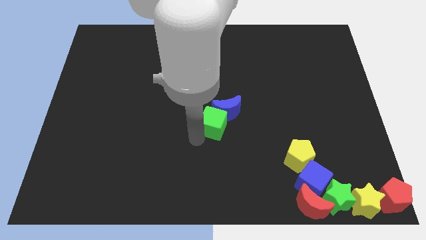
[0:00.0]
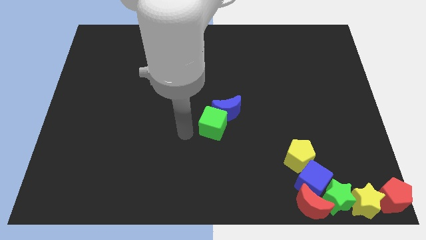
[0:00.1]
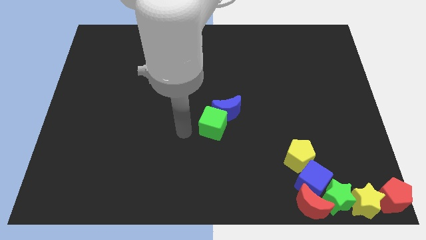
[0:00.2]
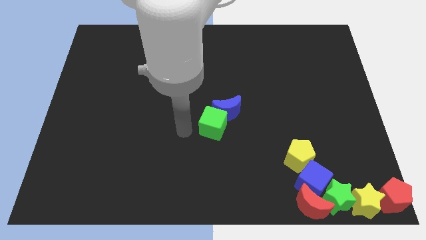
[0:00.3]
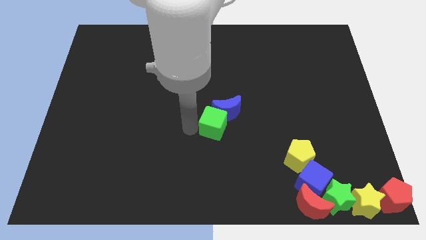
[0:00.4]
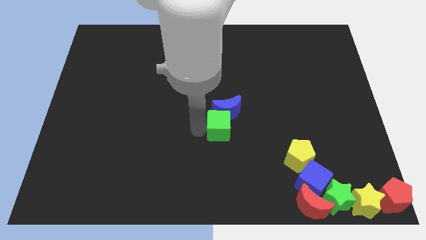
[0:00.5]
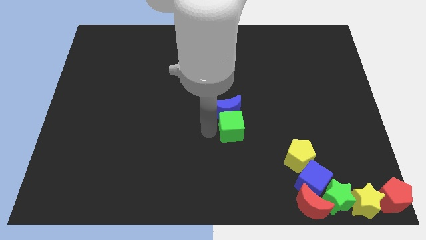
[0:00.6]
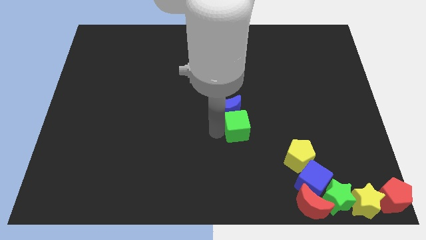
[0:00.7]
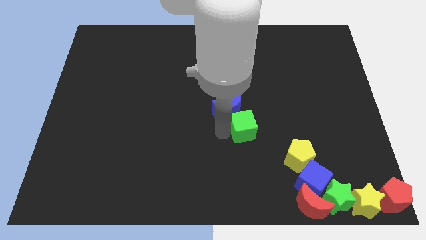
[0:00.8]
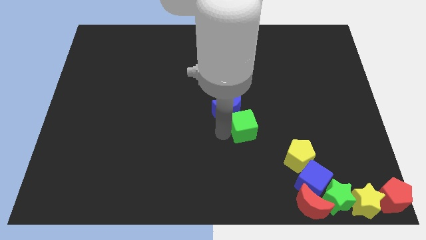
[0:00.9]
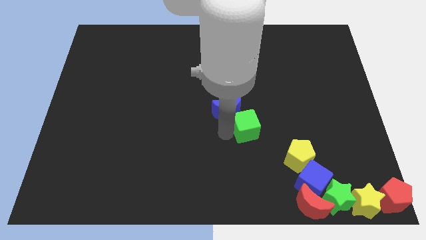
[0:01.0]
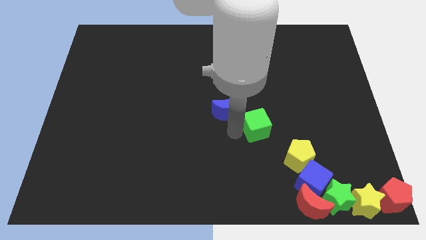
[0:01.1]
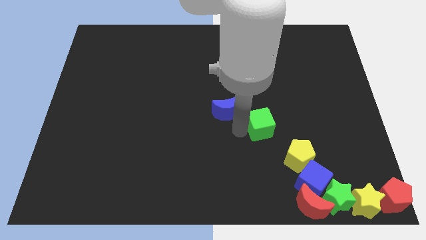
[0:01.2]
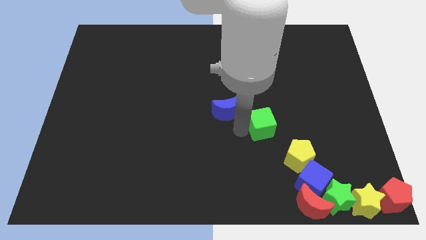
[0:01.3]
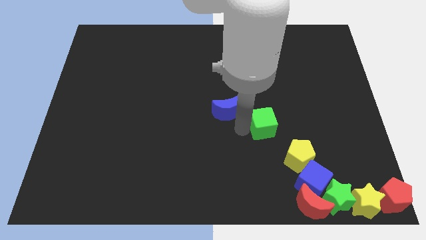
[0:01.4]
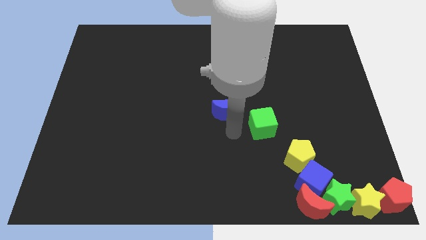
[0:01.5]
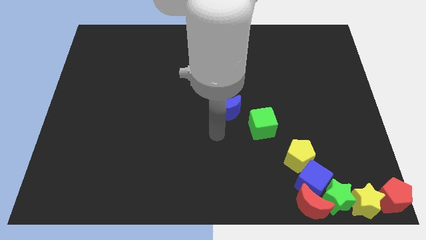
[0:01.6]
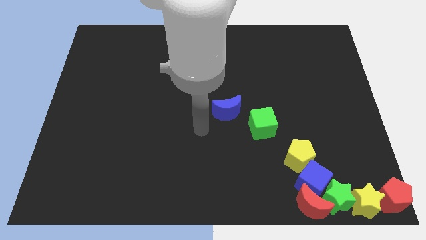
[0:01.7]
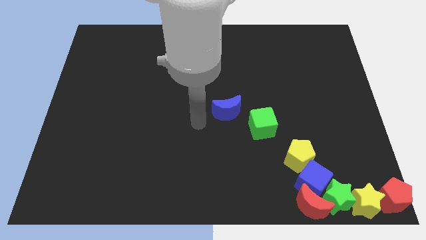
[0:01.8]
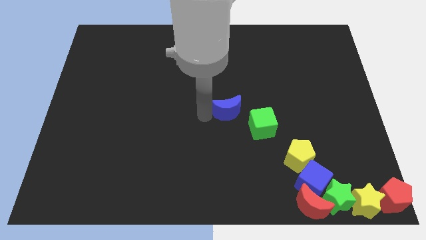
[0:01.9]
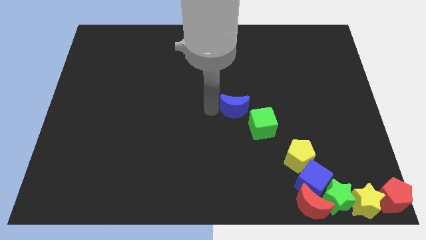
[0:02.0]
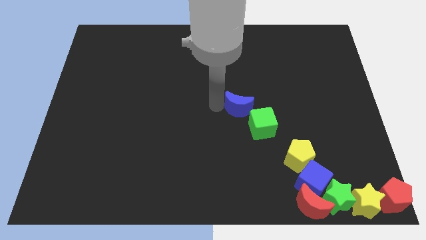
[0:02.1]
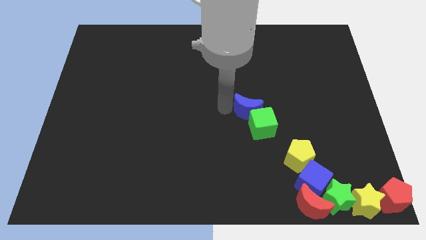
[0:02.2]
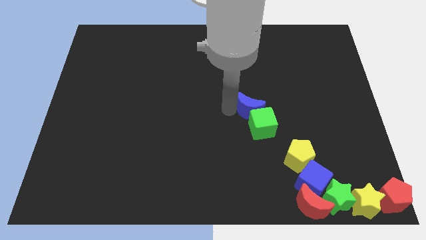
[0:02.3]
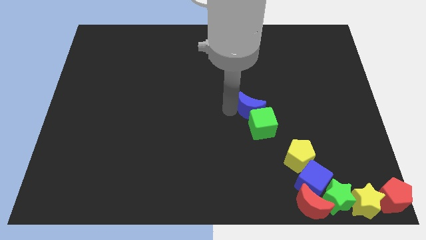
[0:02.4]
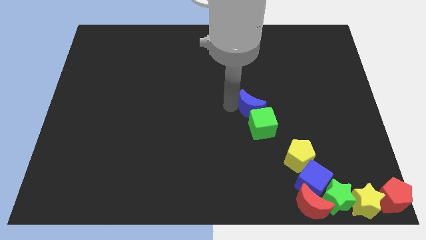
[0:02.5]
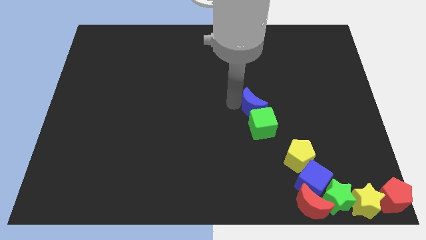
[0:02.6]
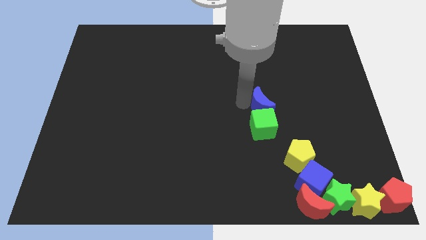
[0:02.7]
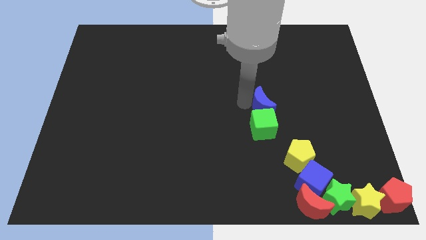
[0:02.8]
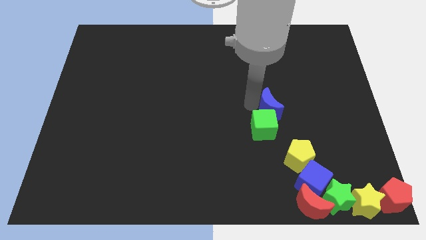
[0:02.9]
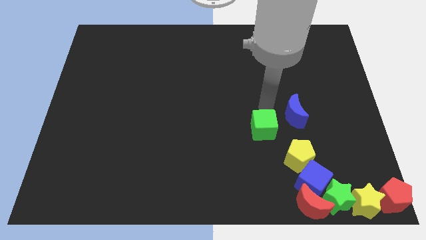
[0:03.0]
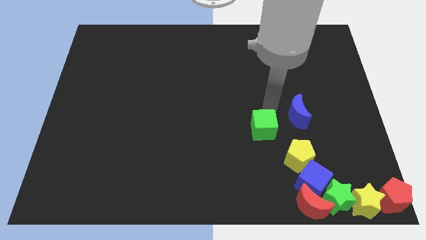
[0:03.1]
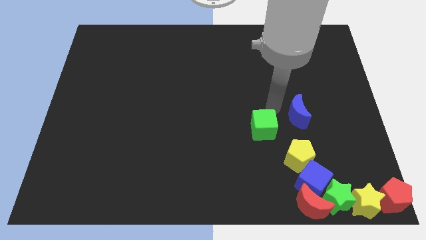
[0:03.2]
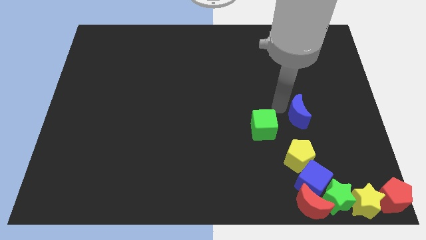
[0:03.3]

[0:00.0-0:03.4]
push the green cube parallel to the yellow pentagon

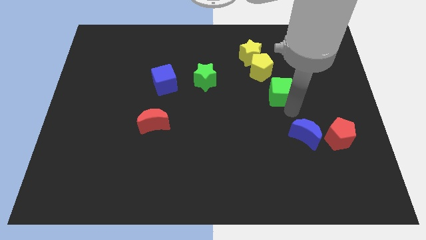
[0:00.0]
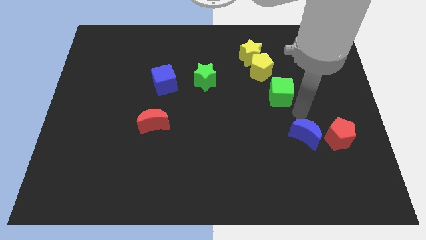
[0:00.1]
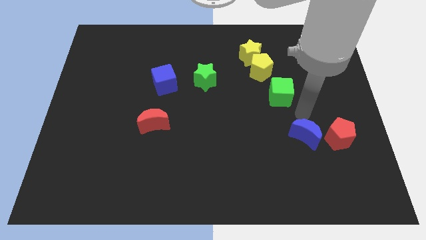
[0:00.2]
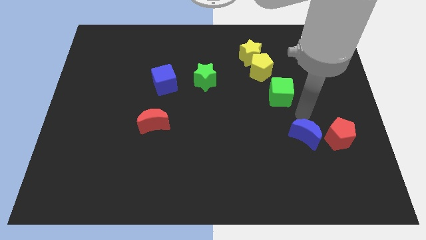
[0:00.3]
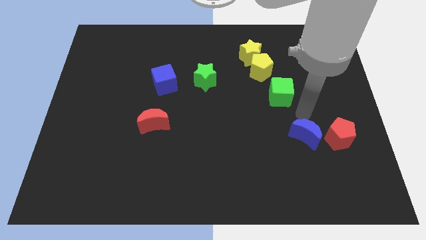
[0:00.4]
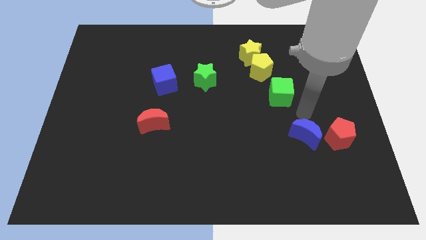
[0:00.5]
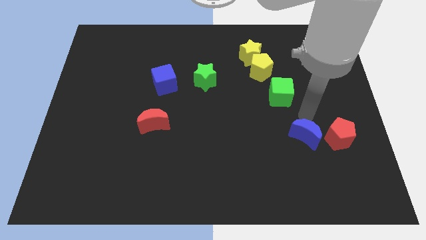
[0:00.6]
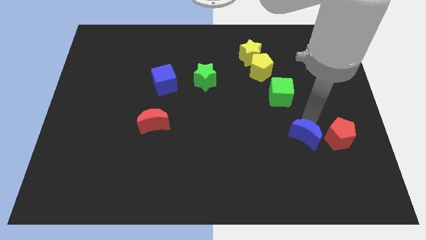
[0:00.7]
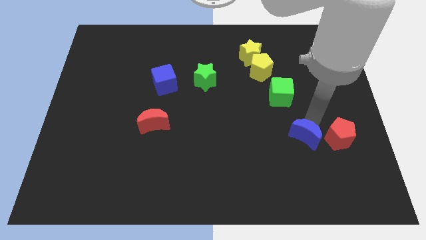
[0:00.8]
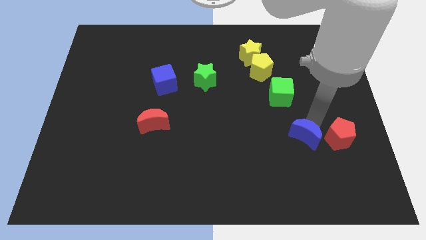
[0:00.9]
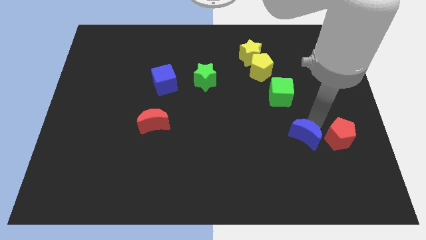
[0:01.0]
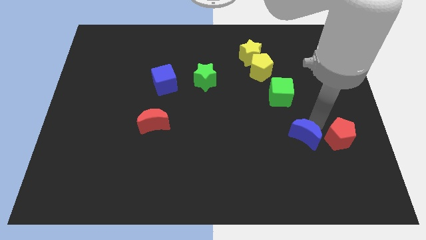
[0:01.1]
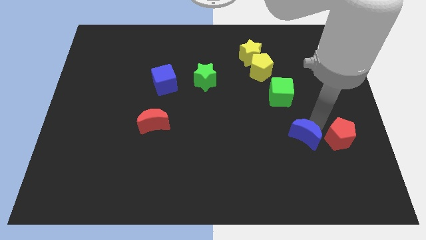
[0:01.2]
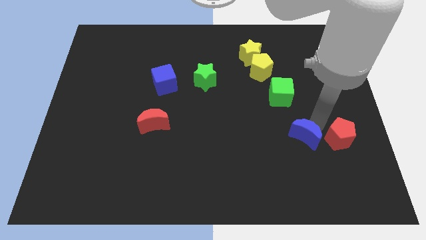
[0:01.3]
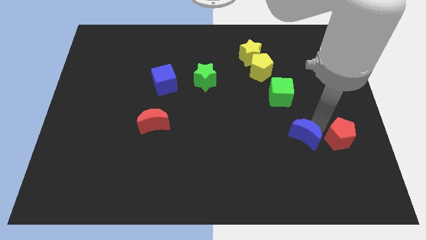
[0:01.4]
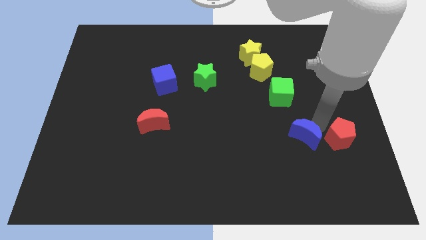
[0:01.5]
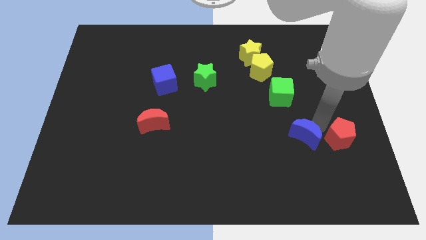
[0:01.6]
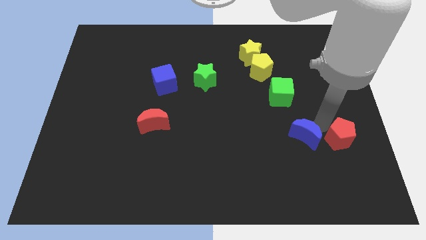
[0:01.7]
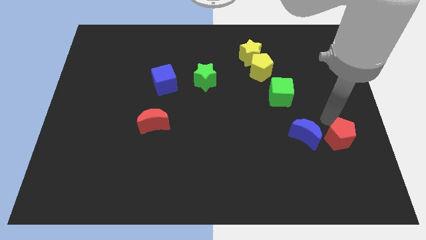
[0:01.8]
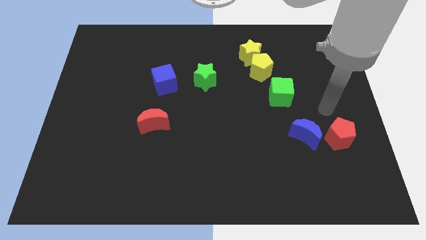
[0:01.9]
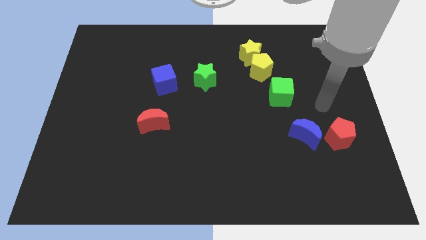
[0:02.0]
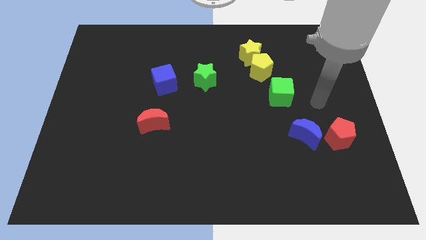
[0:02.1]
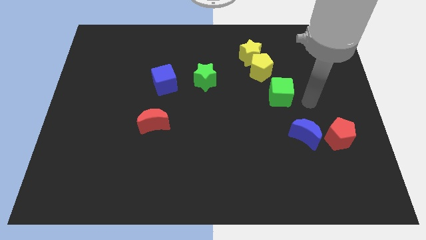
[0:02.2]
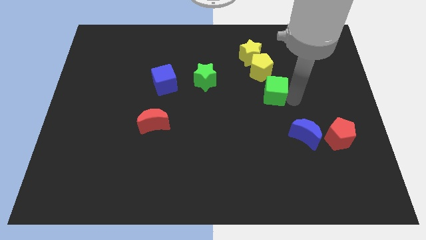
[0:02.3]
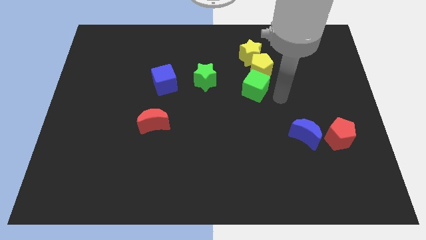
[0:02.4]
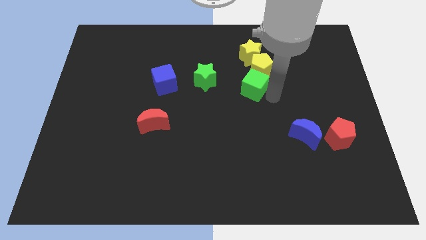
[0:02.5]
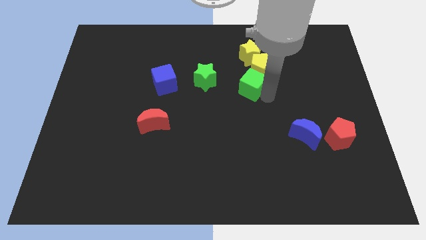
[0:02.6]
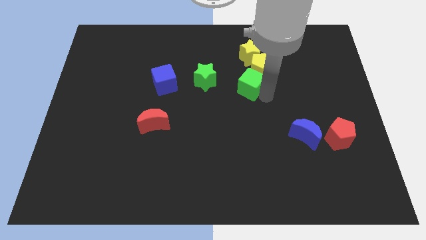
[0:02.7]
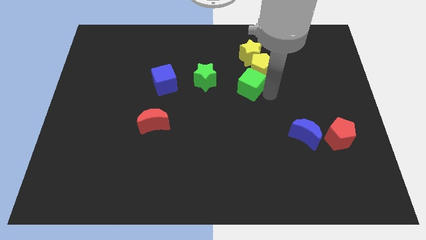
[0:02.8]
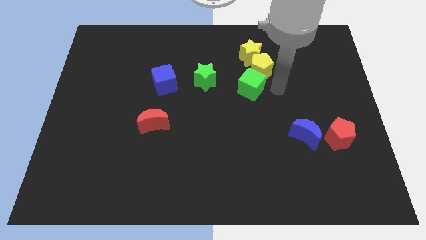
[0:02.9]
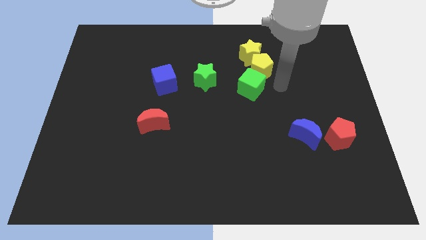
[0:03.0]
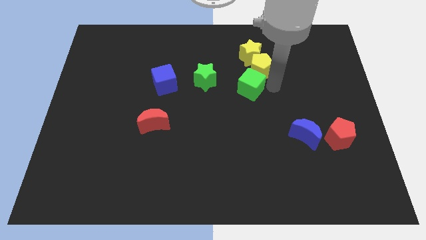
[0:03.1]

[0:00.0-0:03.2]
place the green cube on the bottom left of the yellow pentagon

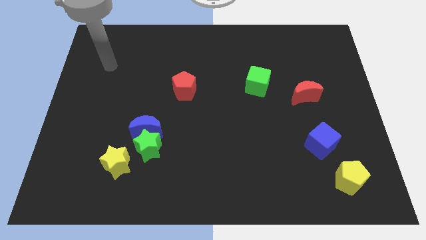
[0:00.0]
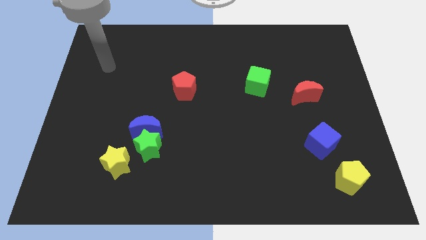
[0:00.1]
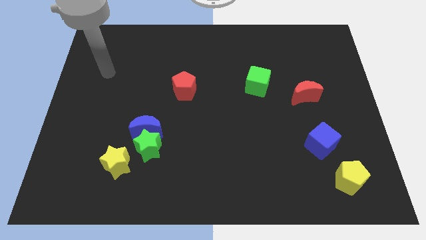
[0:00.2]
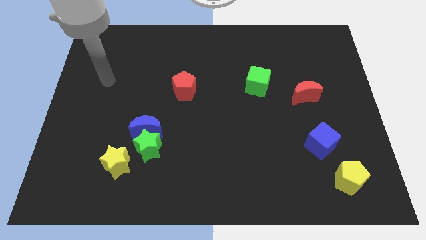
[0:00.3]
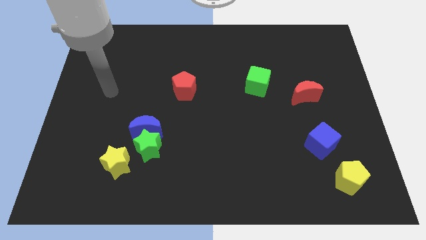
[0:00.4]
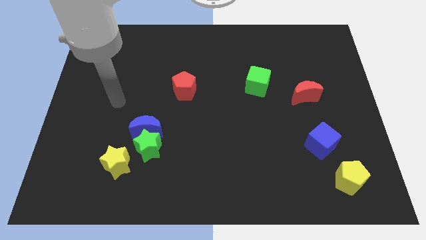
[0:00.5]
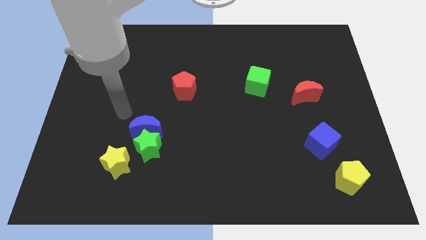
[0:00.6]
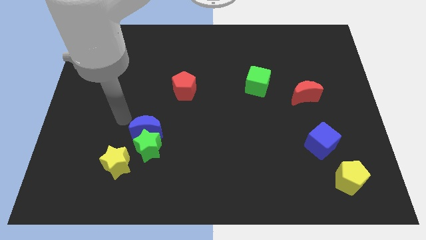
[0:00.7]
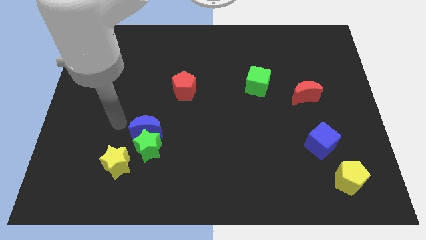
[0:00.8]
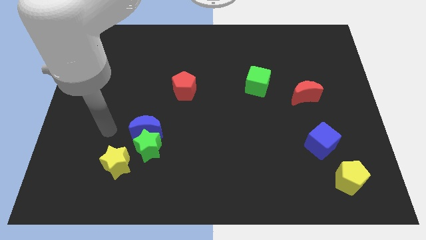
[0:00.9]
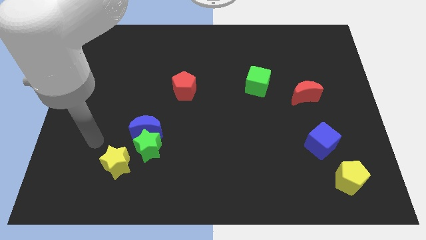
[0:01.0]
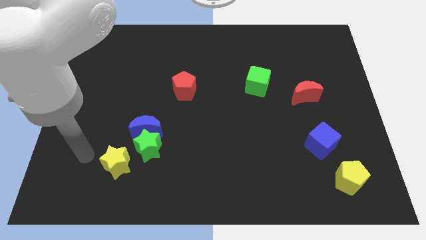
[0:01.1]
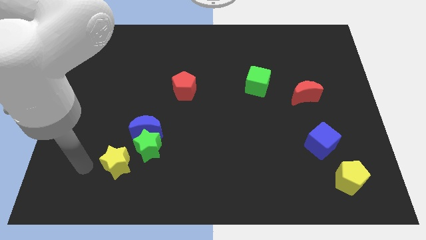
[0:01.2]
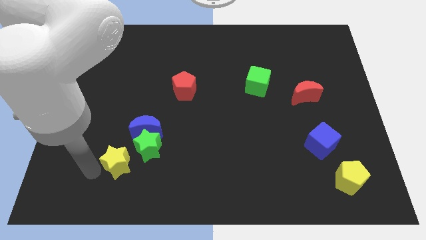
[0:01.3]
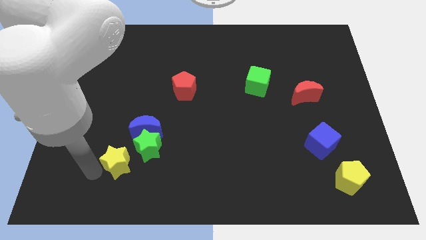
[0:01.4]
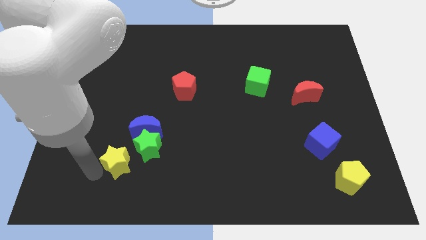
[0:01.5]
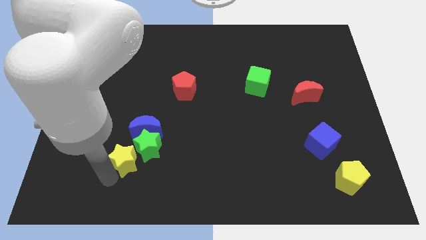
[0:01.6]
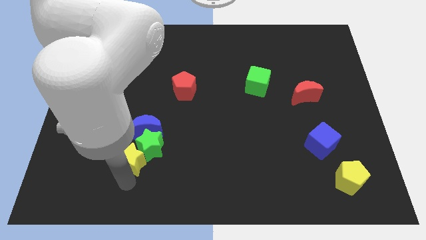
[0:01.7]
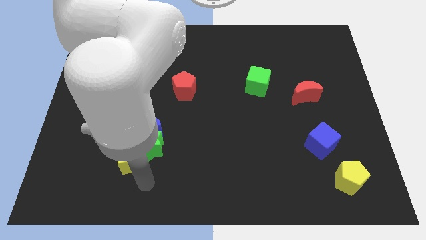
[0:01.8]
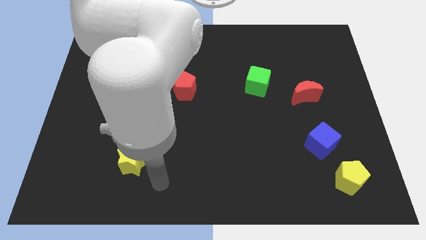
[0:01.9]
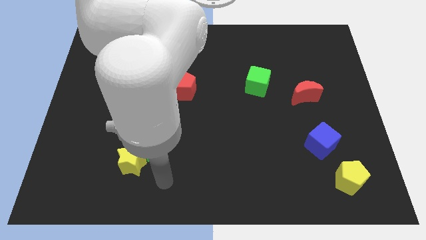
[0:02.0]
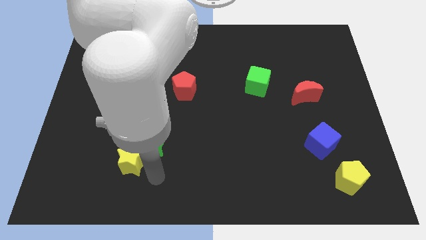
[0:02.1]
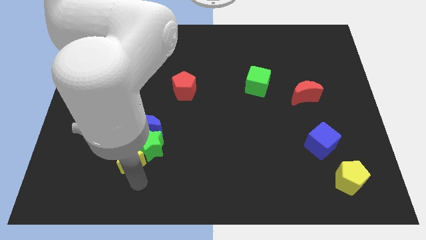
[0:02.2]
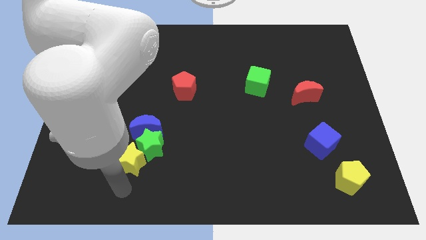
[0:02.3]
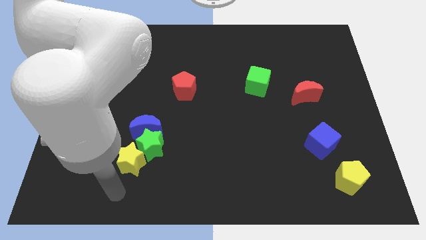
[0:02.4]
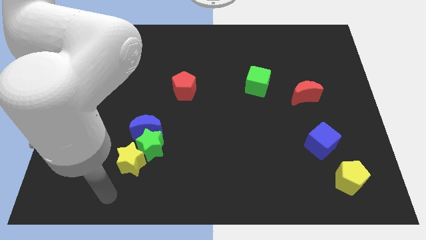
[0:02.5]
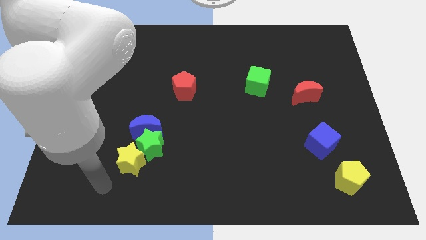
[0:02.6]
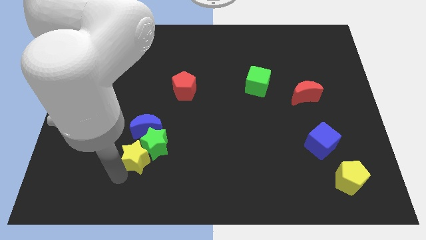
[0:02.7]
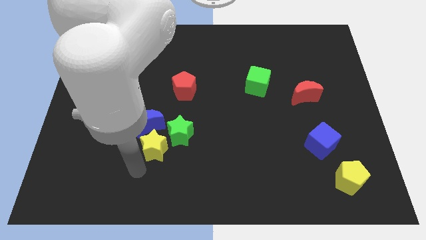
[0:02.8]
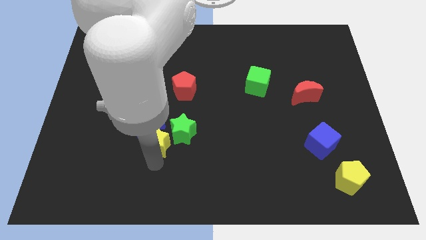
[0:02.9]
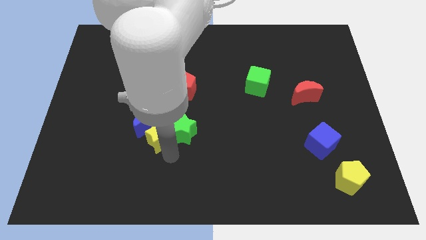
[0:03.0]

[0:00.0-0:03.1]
move the green star below the red pentagon
